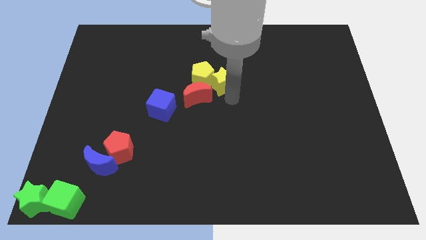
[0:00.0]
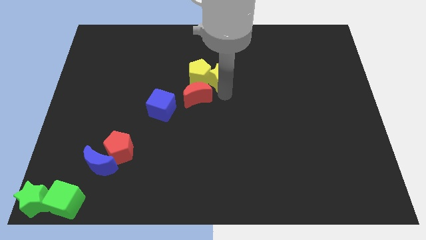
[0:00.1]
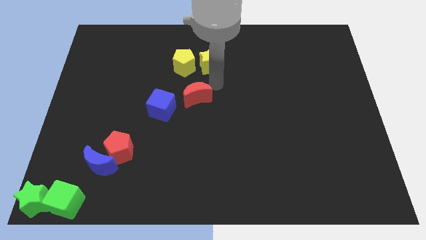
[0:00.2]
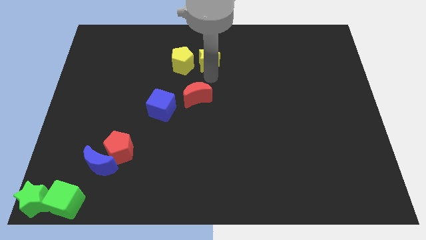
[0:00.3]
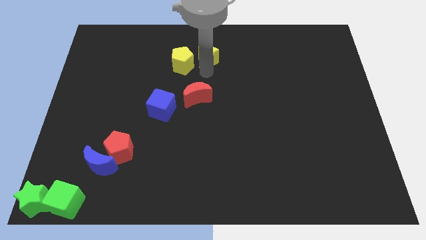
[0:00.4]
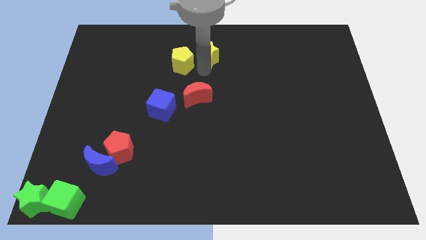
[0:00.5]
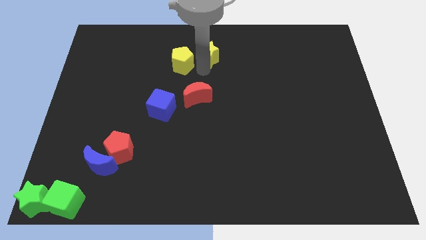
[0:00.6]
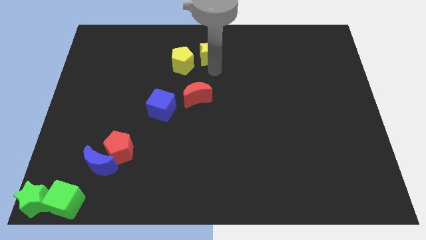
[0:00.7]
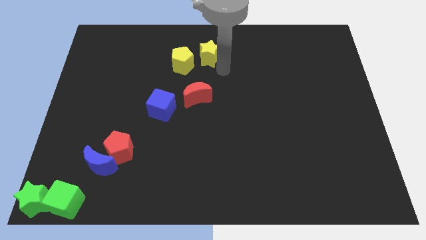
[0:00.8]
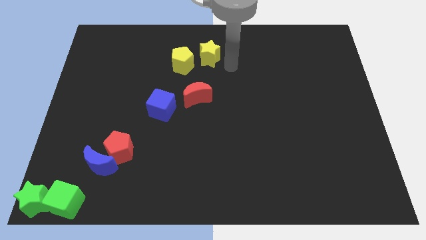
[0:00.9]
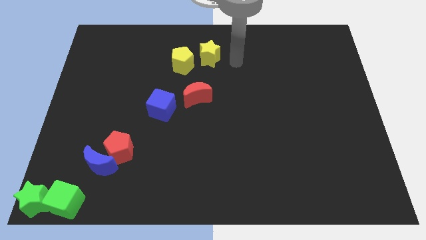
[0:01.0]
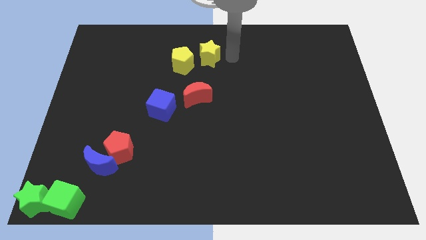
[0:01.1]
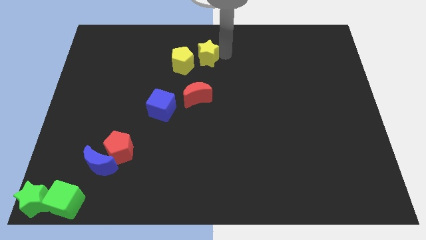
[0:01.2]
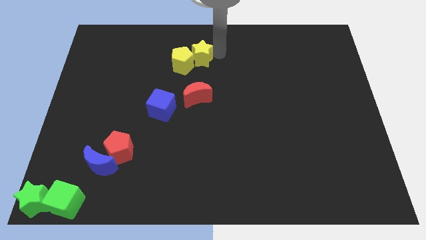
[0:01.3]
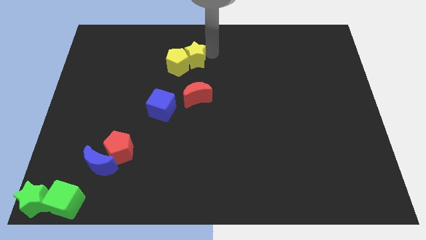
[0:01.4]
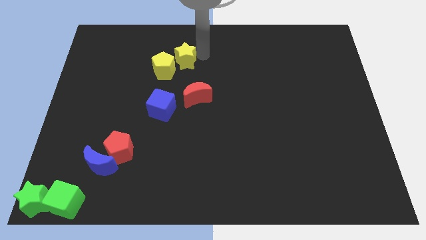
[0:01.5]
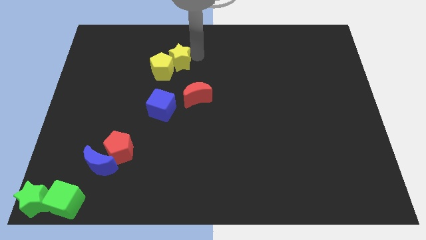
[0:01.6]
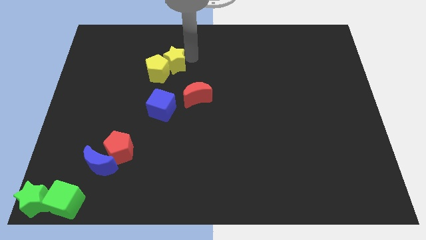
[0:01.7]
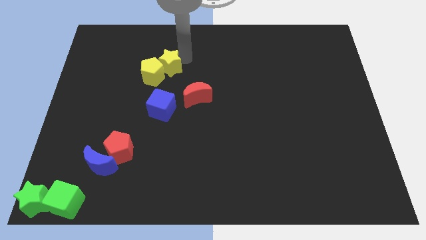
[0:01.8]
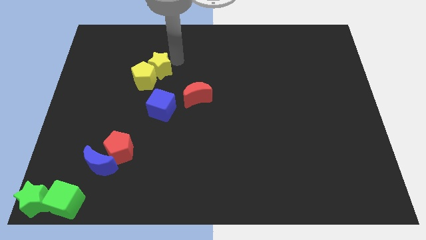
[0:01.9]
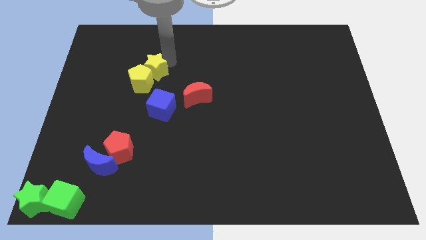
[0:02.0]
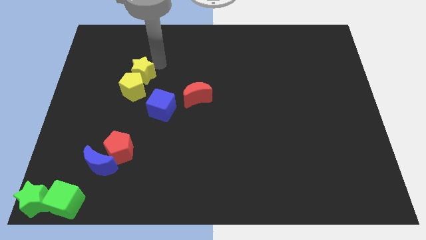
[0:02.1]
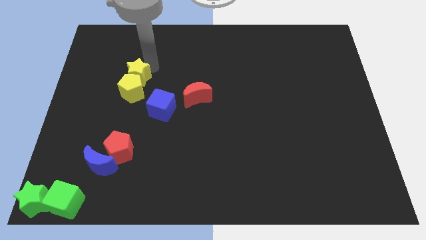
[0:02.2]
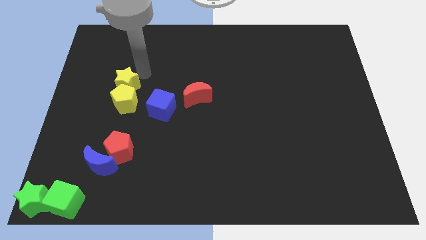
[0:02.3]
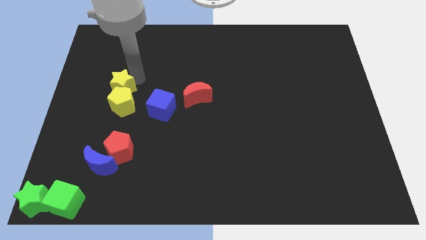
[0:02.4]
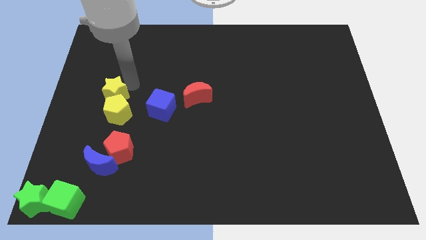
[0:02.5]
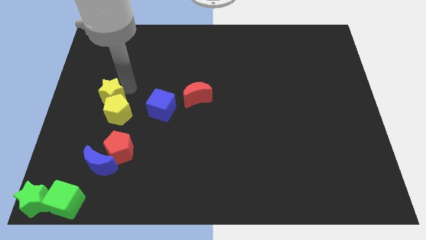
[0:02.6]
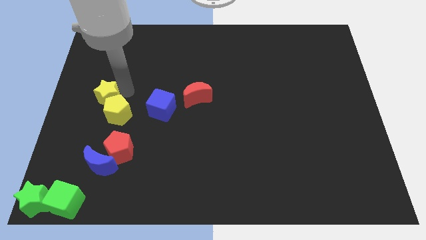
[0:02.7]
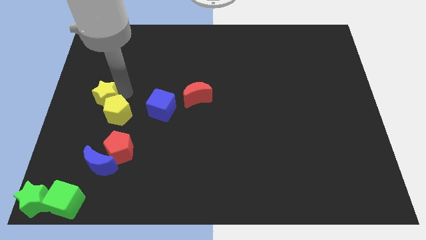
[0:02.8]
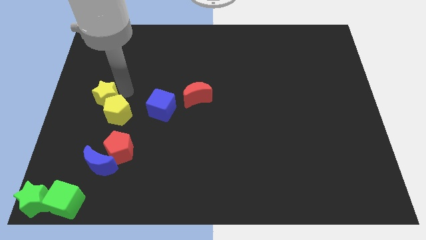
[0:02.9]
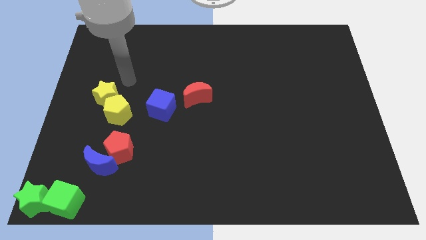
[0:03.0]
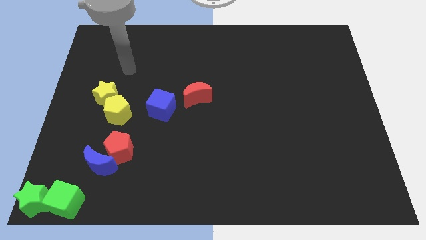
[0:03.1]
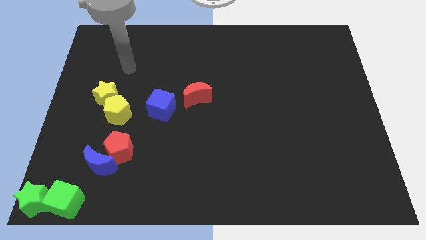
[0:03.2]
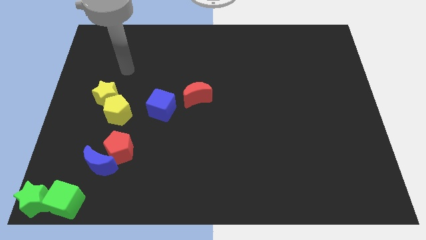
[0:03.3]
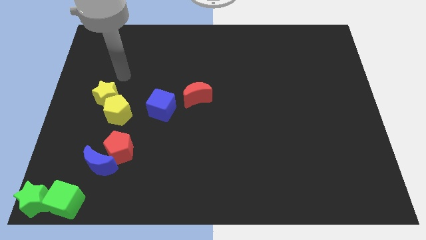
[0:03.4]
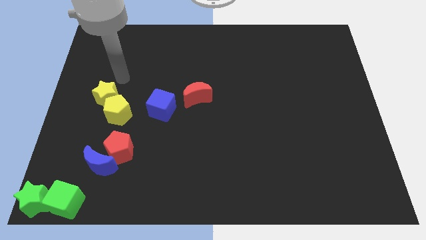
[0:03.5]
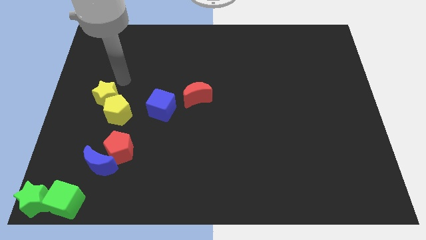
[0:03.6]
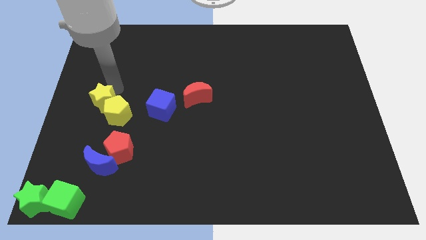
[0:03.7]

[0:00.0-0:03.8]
place the yellow blocks above red pentagon

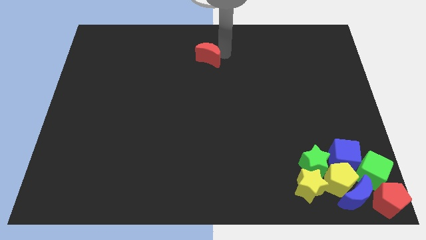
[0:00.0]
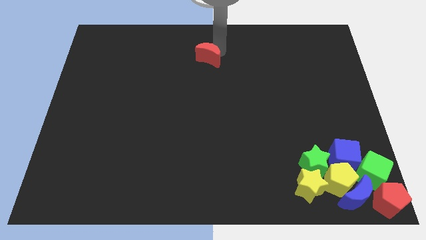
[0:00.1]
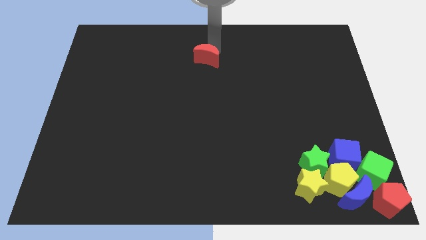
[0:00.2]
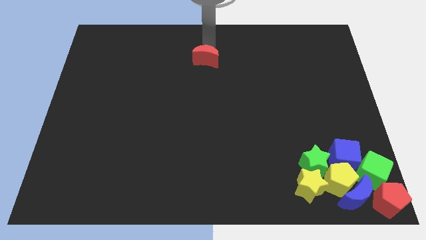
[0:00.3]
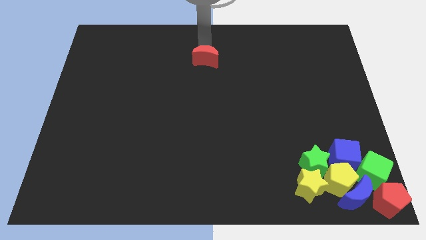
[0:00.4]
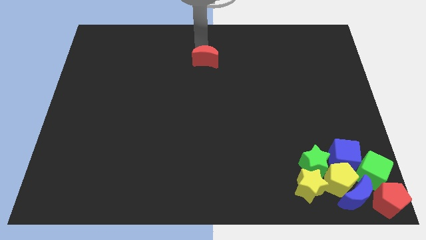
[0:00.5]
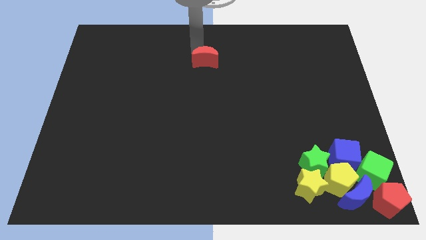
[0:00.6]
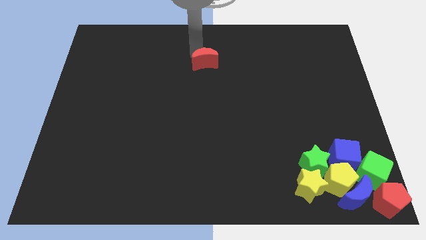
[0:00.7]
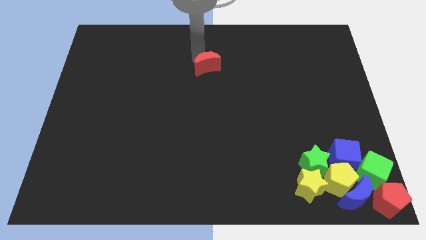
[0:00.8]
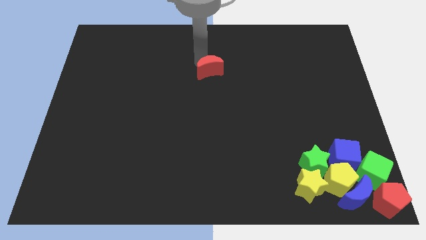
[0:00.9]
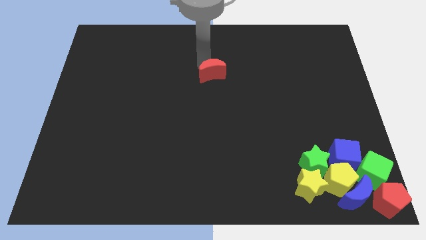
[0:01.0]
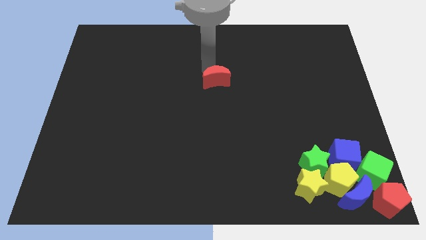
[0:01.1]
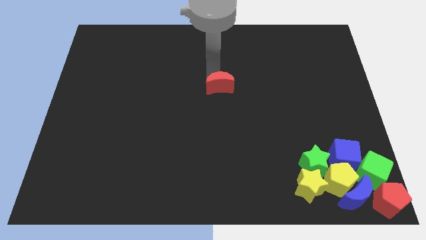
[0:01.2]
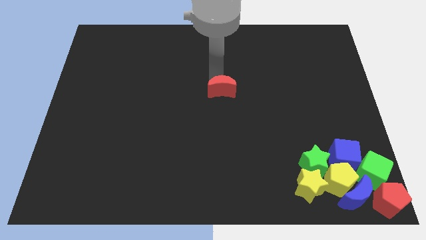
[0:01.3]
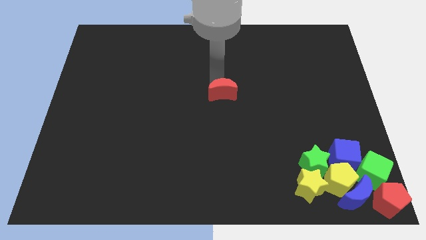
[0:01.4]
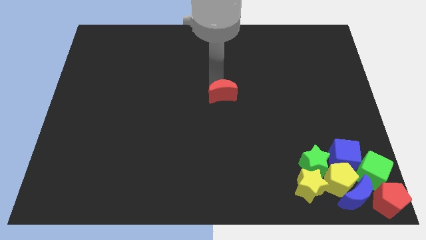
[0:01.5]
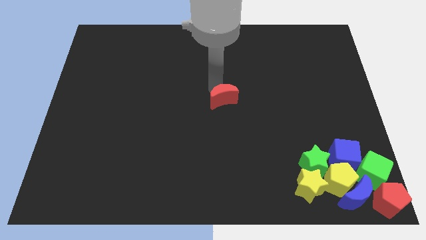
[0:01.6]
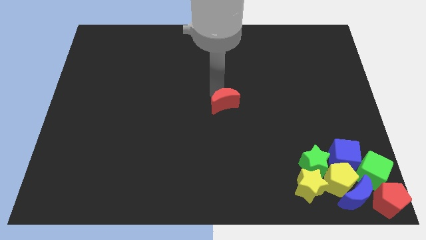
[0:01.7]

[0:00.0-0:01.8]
move the red crescent to the center of the board

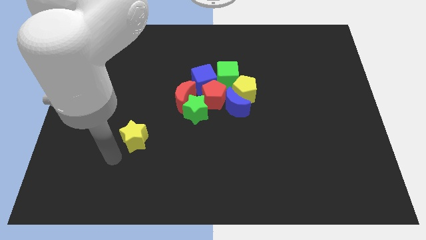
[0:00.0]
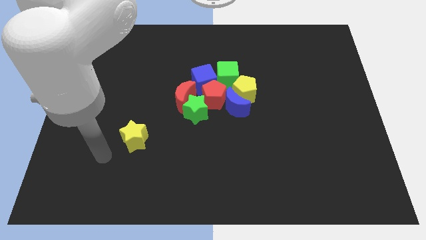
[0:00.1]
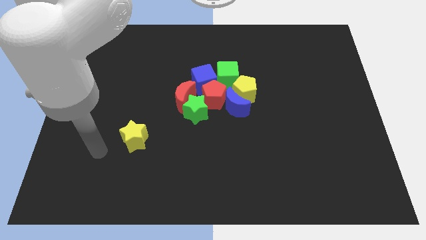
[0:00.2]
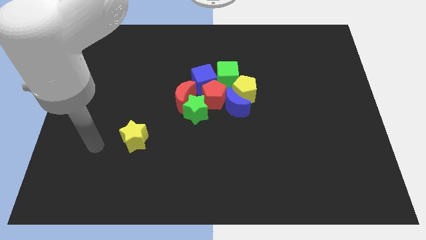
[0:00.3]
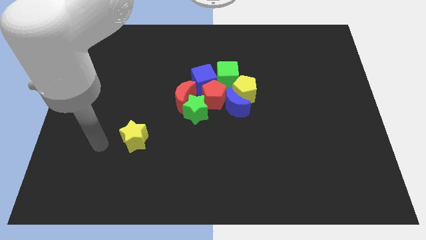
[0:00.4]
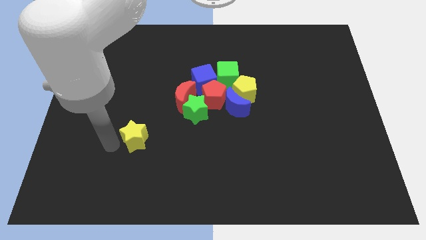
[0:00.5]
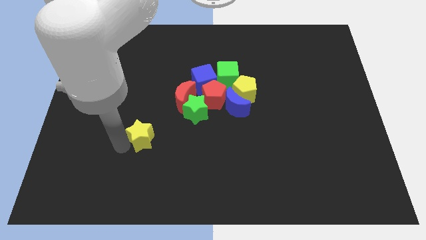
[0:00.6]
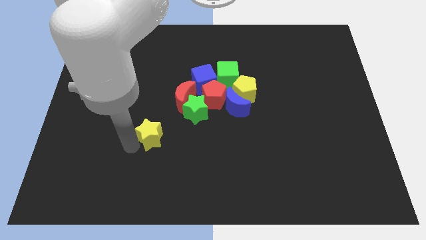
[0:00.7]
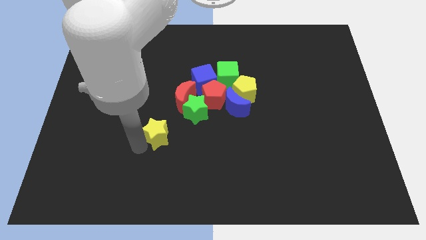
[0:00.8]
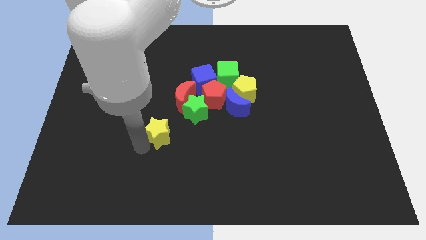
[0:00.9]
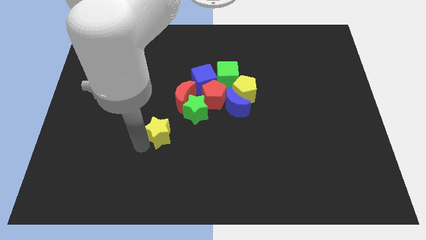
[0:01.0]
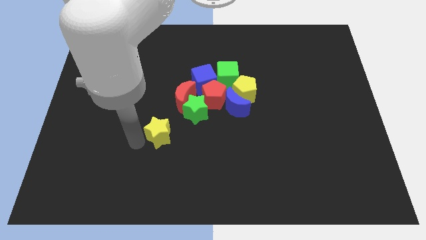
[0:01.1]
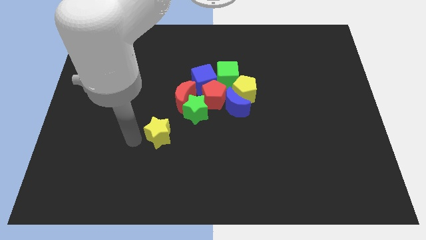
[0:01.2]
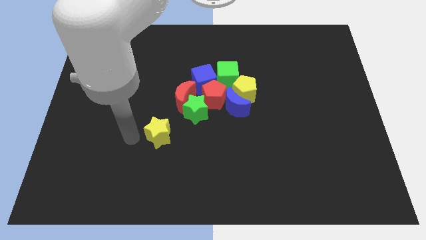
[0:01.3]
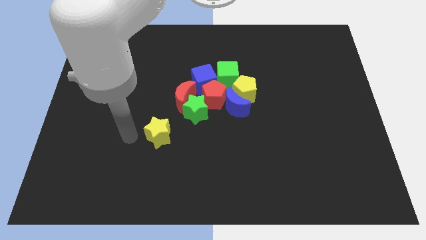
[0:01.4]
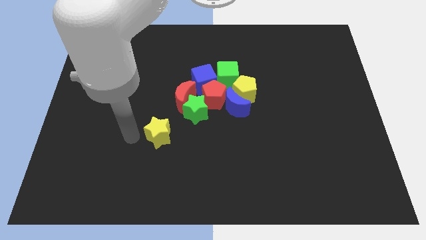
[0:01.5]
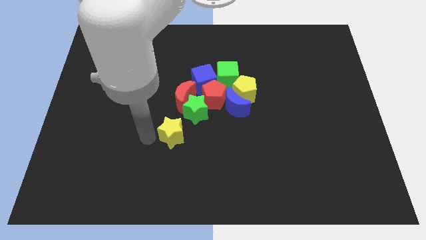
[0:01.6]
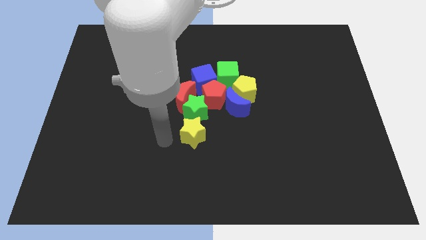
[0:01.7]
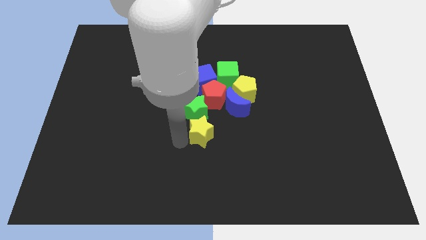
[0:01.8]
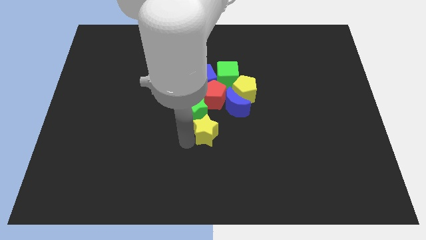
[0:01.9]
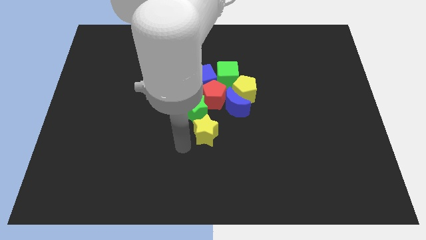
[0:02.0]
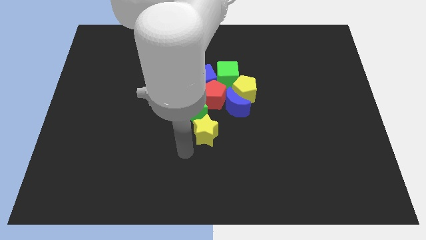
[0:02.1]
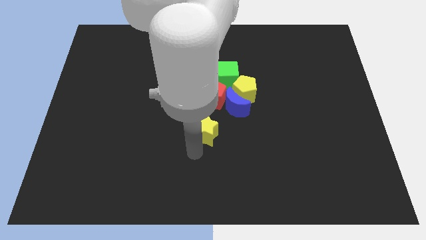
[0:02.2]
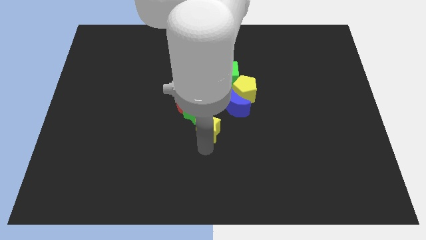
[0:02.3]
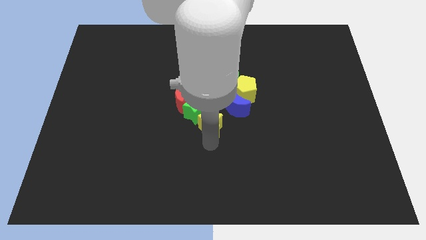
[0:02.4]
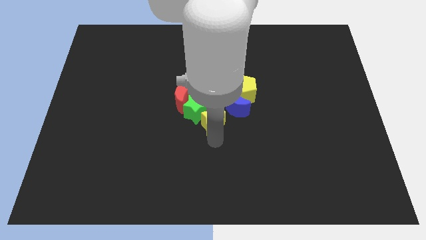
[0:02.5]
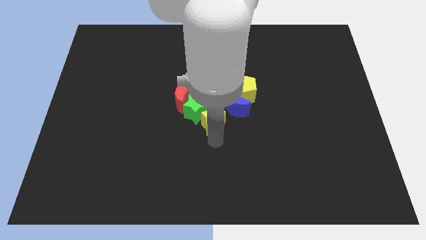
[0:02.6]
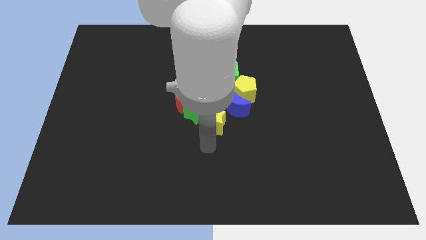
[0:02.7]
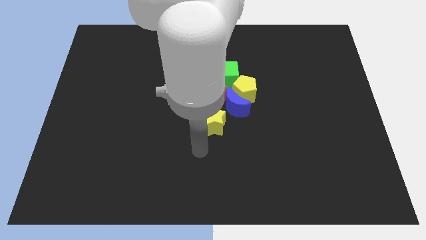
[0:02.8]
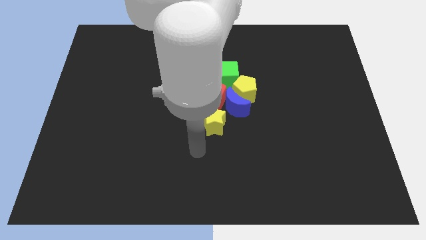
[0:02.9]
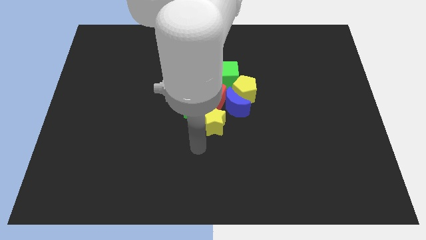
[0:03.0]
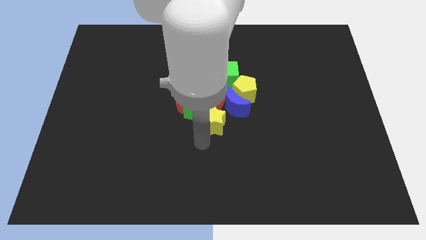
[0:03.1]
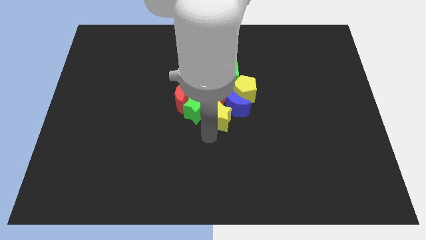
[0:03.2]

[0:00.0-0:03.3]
place yellow star below red pentagon

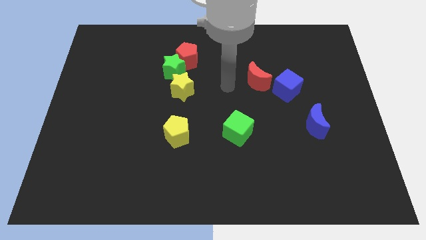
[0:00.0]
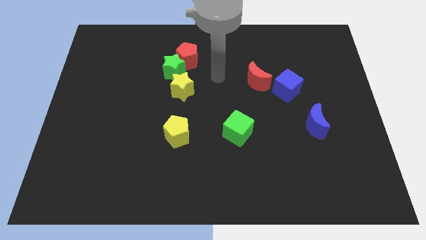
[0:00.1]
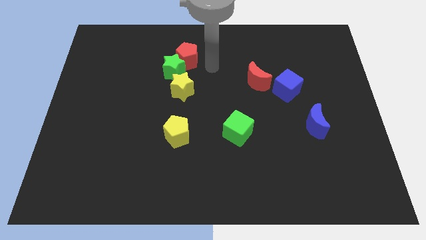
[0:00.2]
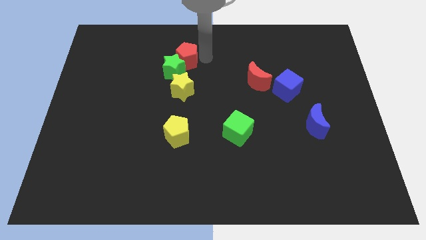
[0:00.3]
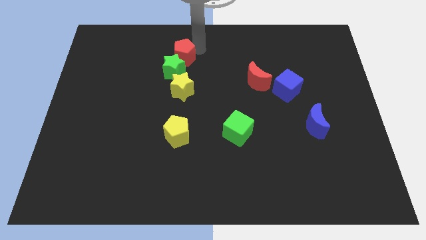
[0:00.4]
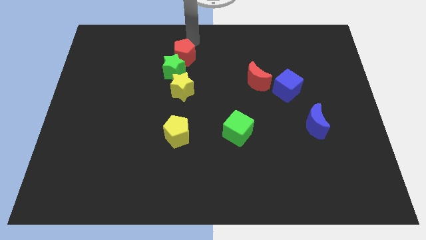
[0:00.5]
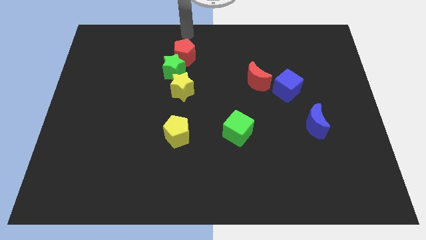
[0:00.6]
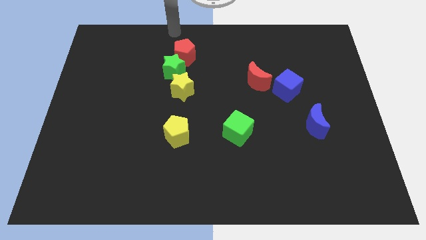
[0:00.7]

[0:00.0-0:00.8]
point the arm above the red pentagon
